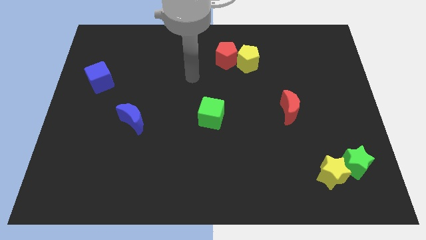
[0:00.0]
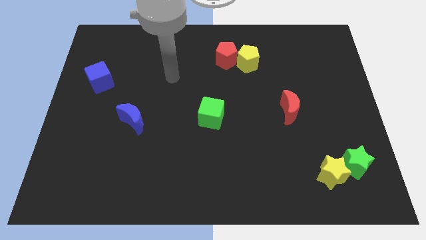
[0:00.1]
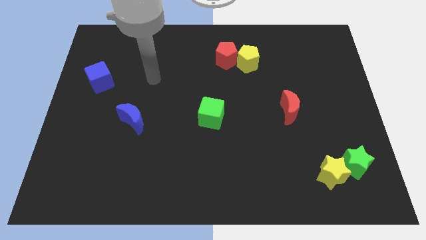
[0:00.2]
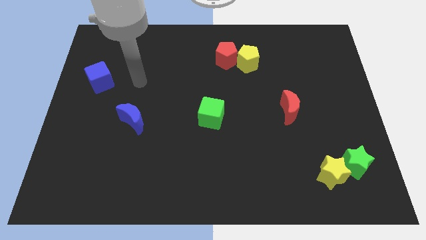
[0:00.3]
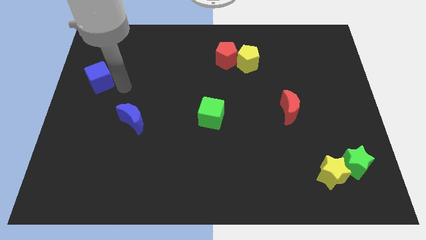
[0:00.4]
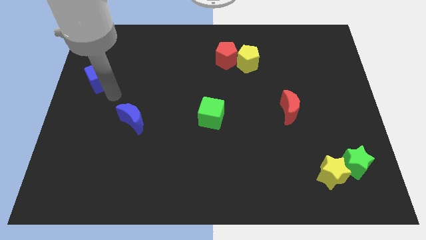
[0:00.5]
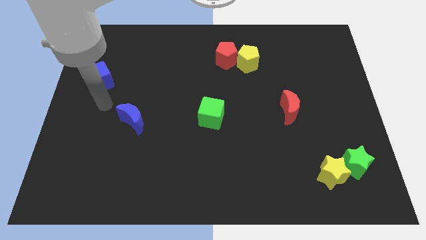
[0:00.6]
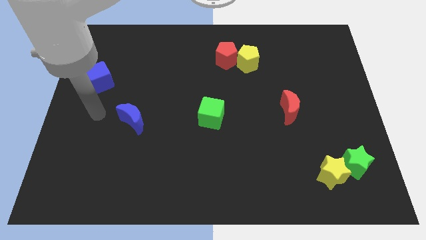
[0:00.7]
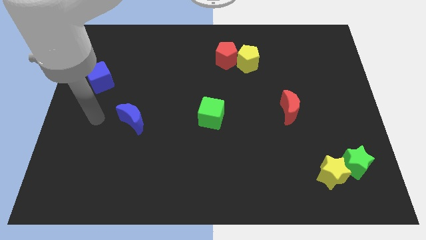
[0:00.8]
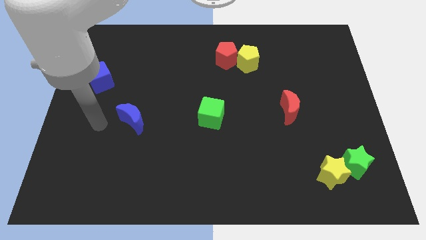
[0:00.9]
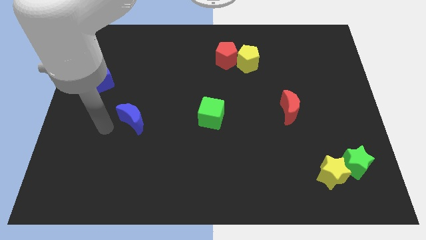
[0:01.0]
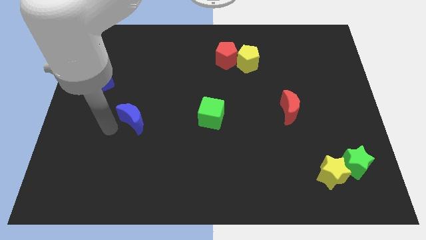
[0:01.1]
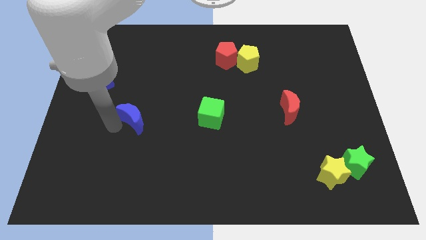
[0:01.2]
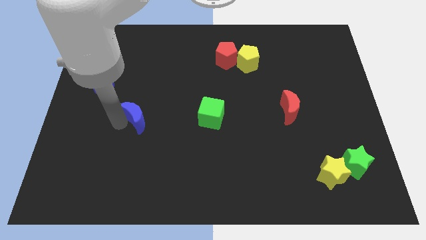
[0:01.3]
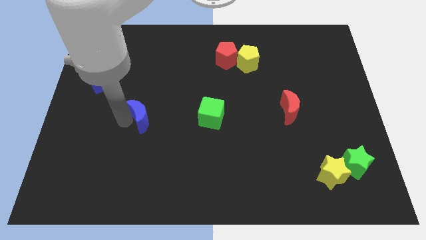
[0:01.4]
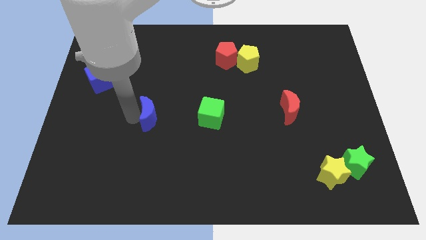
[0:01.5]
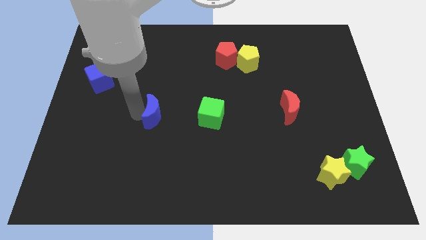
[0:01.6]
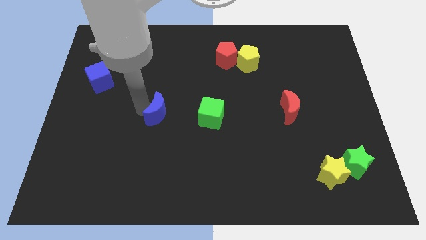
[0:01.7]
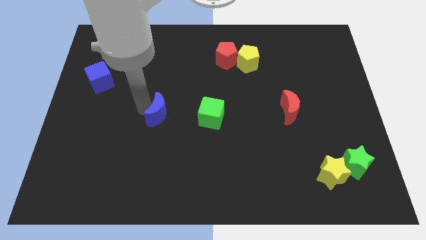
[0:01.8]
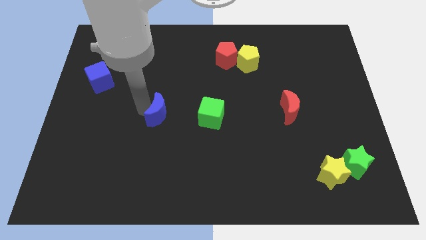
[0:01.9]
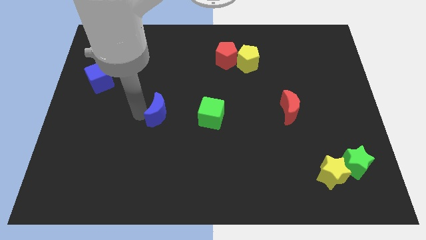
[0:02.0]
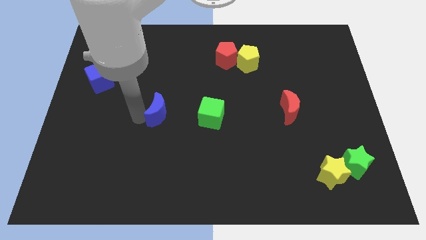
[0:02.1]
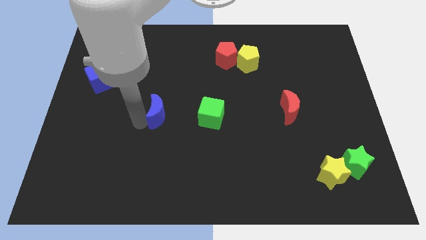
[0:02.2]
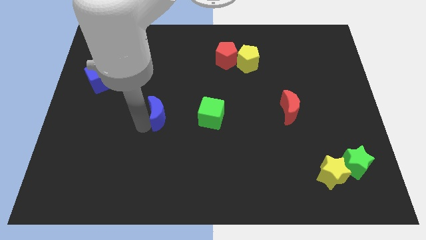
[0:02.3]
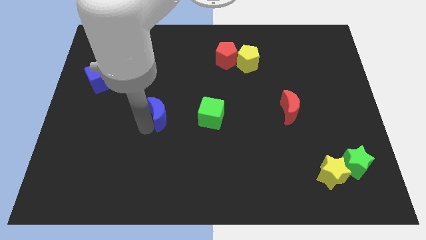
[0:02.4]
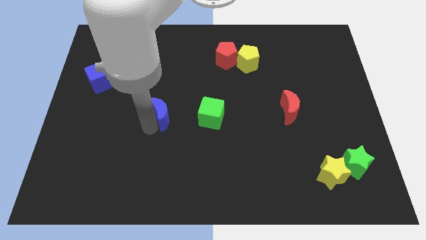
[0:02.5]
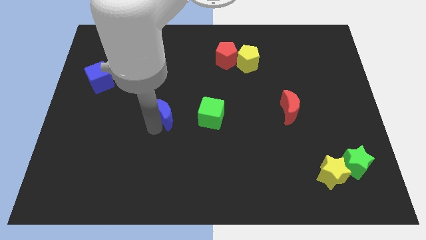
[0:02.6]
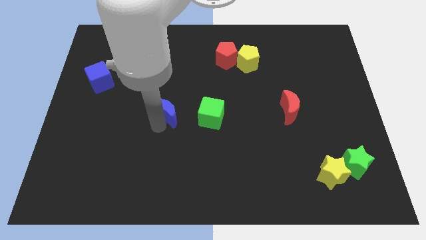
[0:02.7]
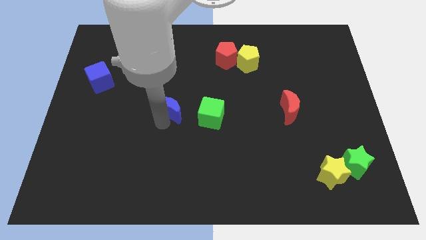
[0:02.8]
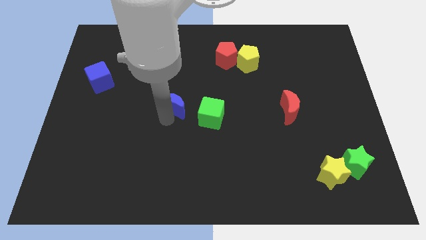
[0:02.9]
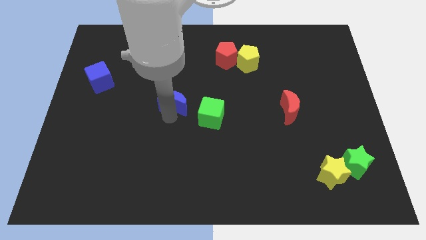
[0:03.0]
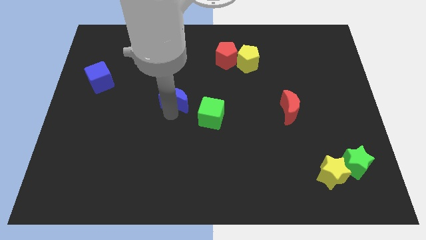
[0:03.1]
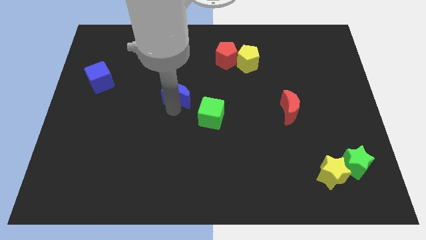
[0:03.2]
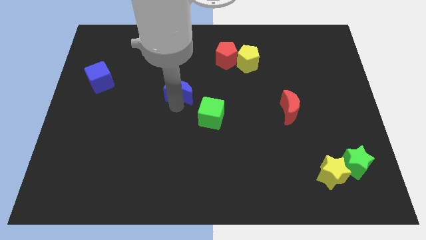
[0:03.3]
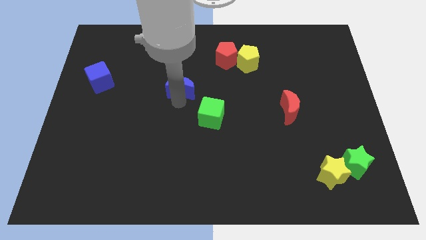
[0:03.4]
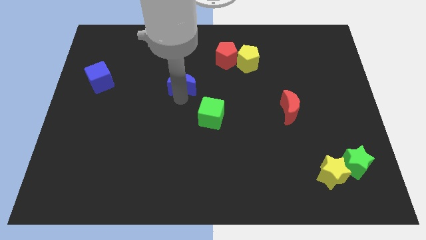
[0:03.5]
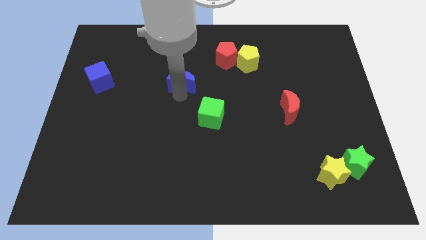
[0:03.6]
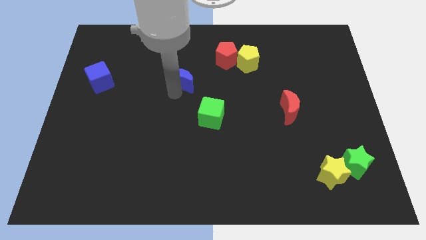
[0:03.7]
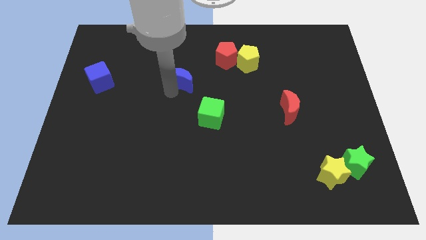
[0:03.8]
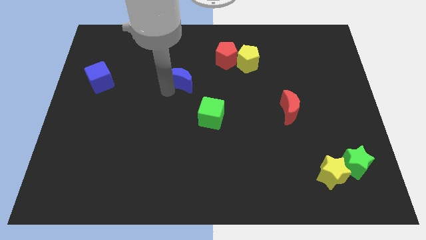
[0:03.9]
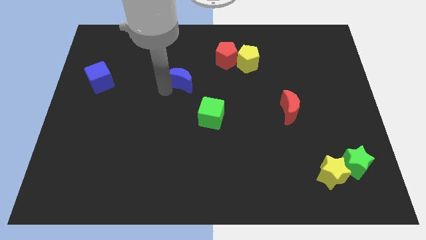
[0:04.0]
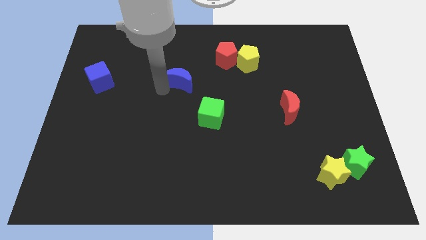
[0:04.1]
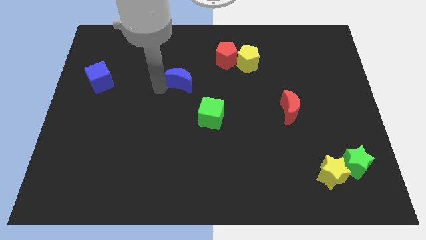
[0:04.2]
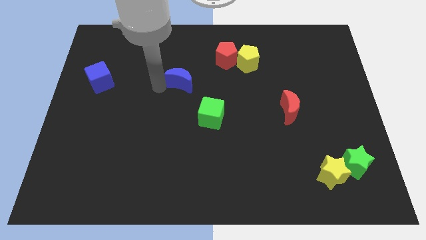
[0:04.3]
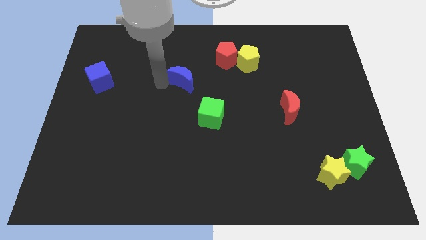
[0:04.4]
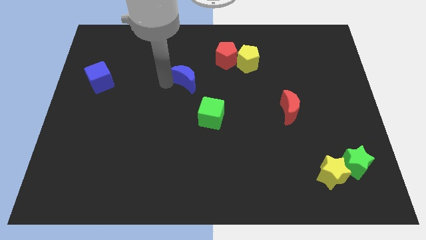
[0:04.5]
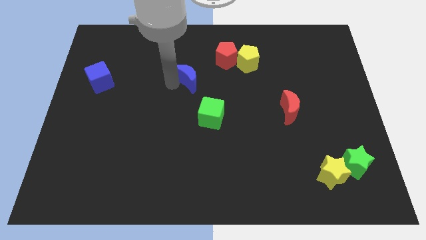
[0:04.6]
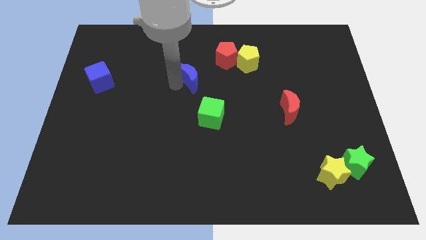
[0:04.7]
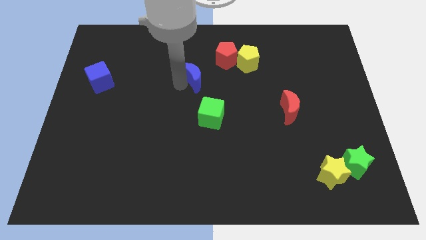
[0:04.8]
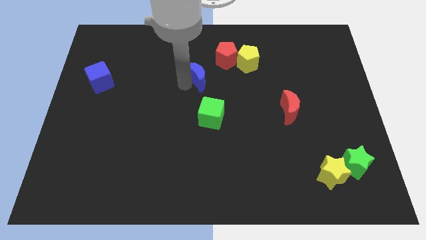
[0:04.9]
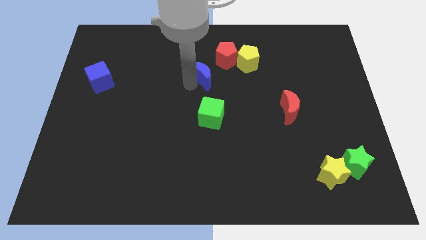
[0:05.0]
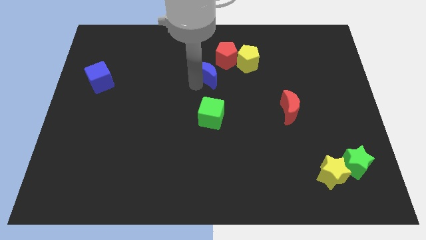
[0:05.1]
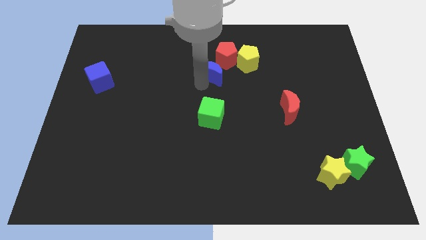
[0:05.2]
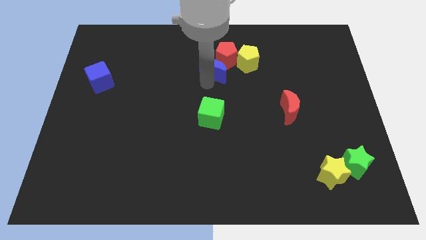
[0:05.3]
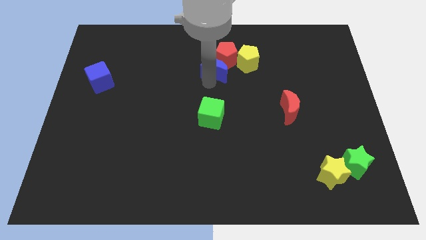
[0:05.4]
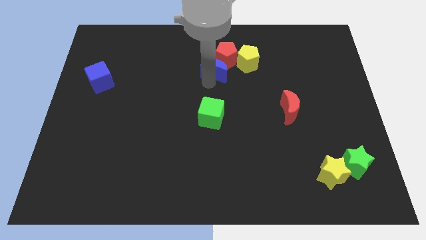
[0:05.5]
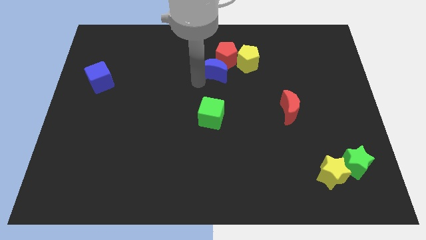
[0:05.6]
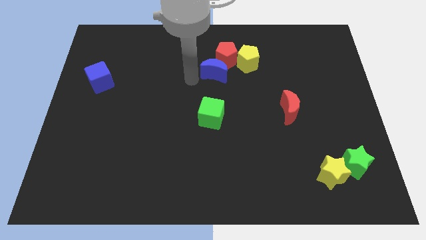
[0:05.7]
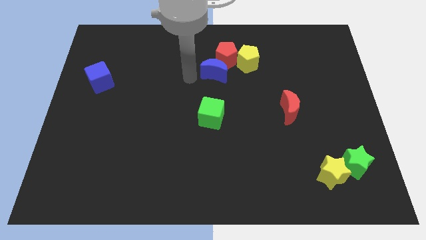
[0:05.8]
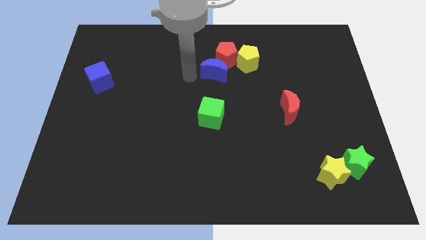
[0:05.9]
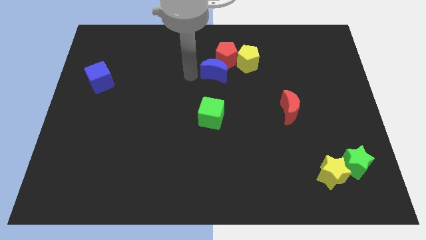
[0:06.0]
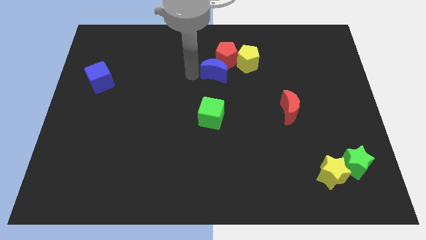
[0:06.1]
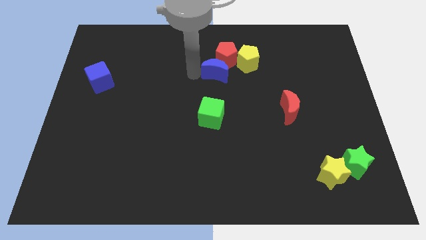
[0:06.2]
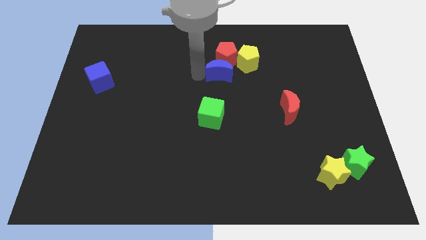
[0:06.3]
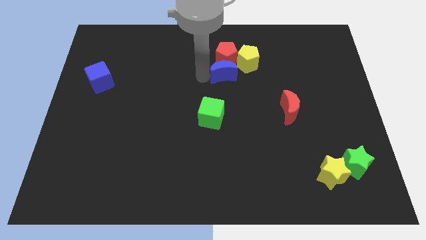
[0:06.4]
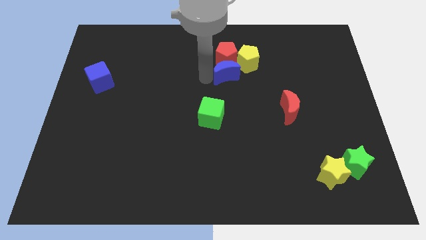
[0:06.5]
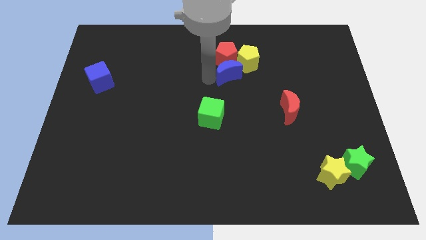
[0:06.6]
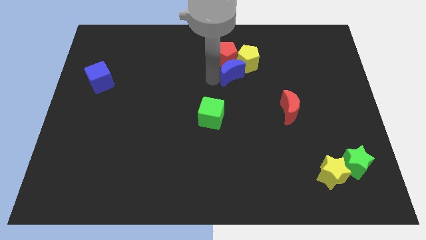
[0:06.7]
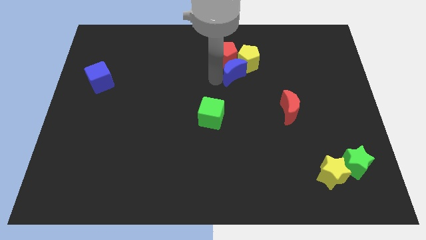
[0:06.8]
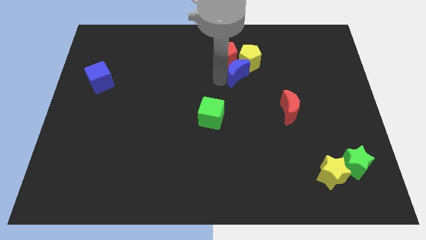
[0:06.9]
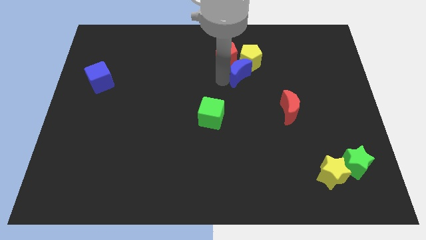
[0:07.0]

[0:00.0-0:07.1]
slide the blue moon close to the yellow pentagon

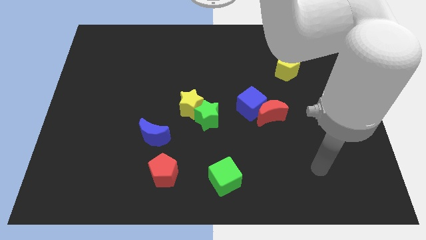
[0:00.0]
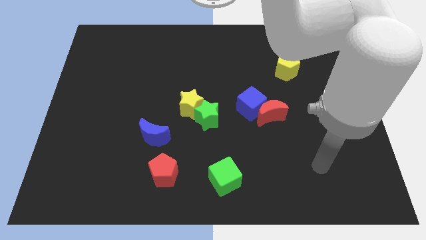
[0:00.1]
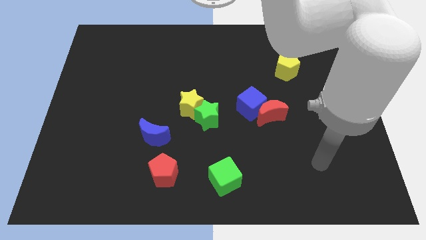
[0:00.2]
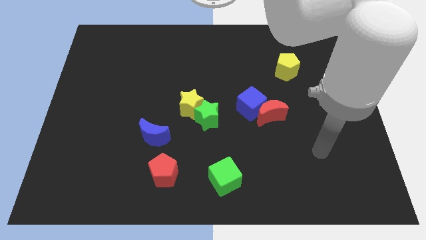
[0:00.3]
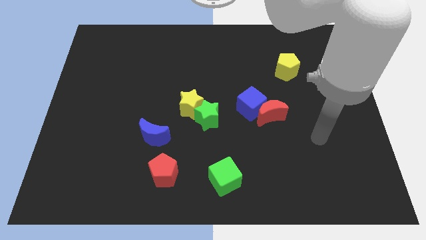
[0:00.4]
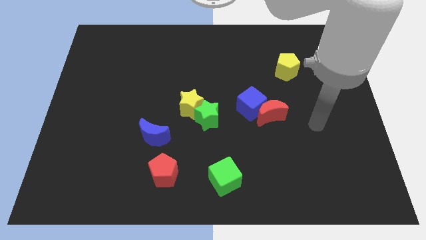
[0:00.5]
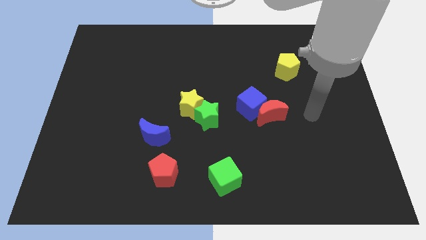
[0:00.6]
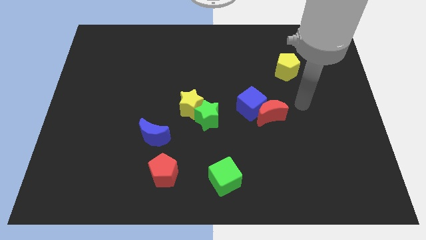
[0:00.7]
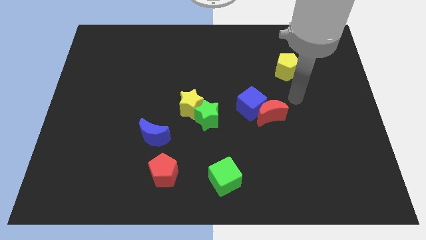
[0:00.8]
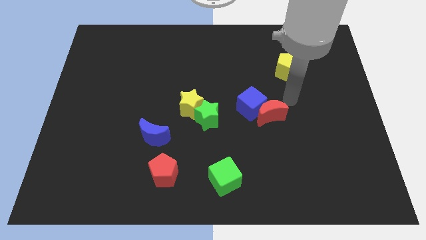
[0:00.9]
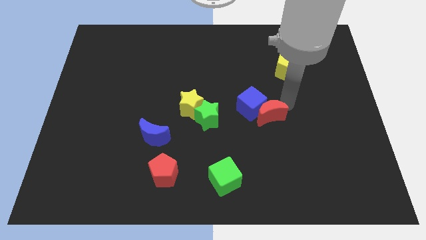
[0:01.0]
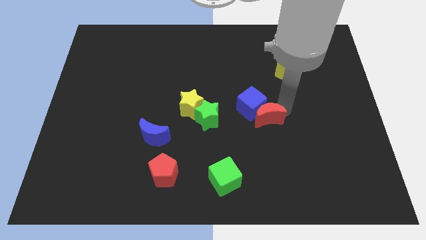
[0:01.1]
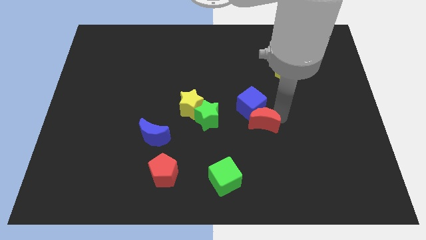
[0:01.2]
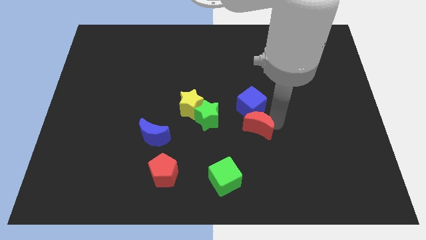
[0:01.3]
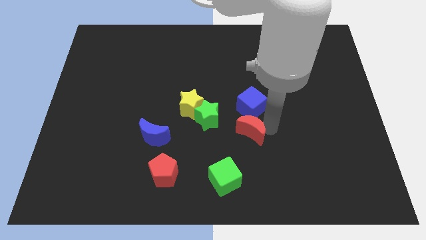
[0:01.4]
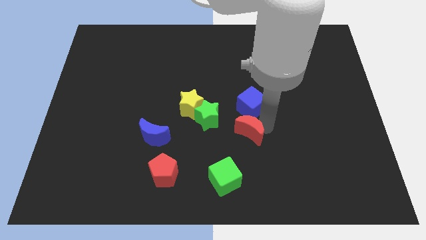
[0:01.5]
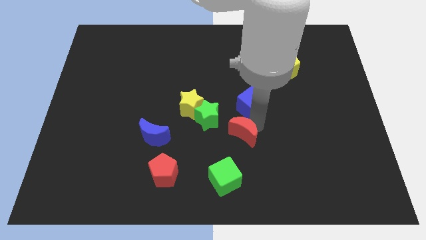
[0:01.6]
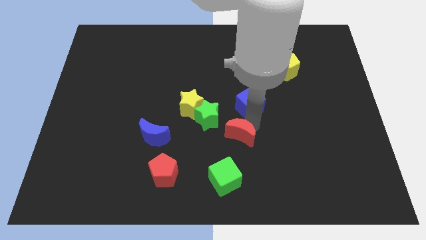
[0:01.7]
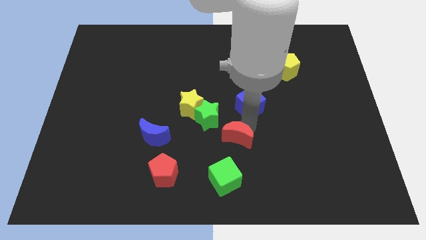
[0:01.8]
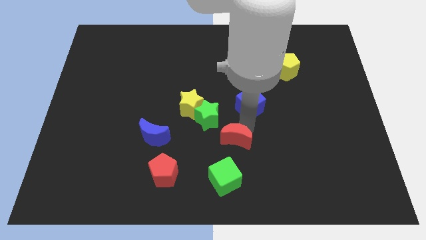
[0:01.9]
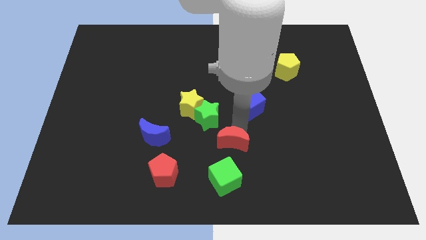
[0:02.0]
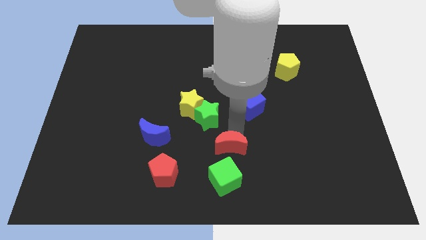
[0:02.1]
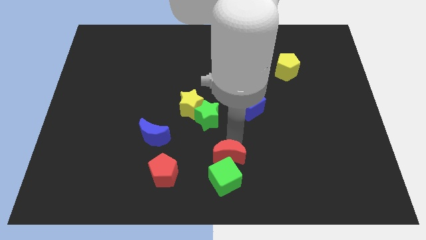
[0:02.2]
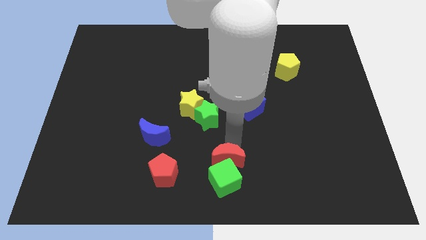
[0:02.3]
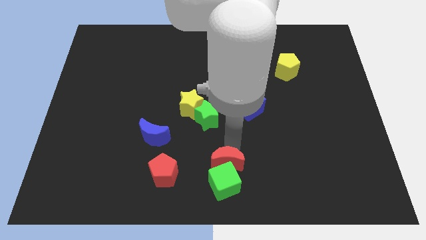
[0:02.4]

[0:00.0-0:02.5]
put the red moon to the green cube
